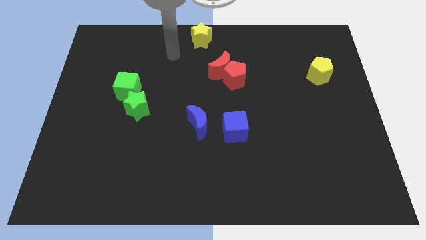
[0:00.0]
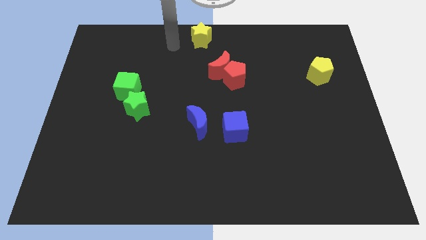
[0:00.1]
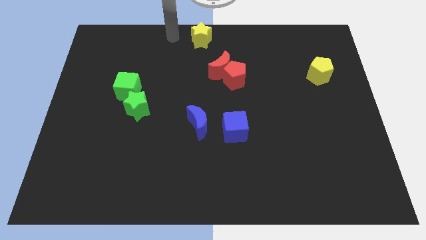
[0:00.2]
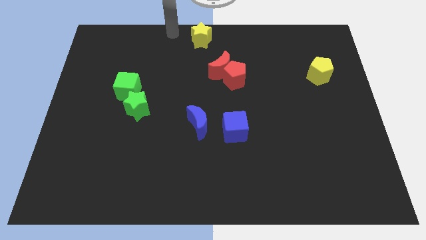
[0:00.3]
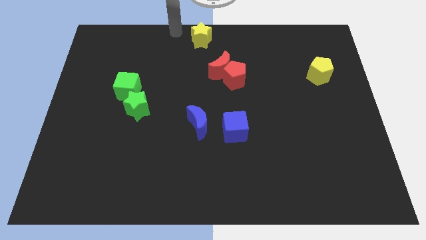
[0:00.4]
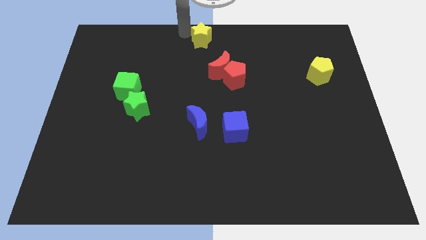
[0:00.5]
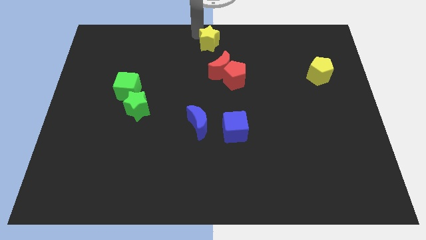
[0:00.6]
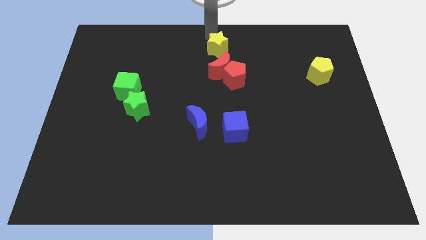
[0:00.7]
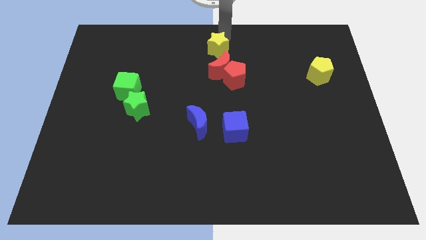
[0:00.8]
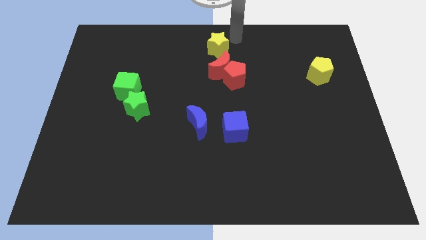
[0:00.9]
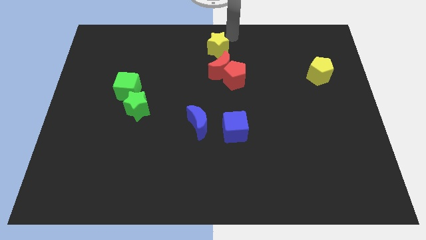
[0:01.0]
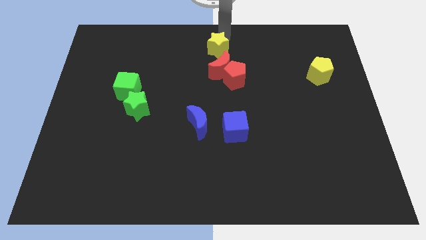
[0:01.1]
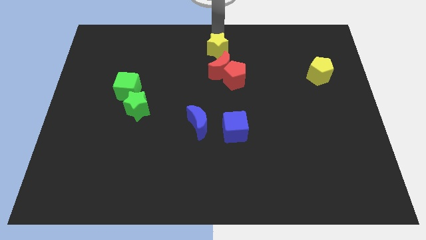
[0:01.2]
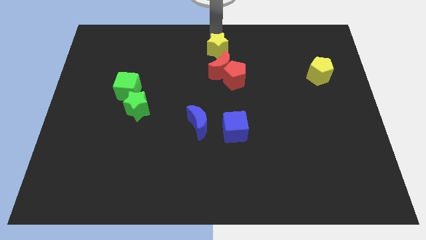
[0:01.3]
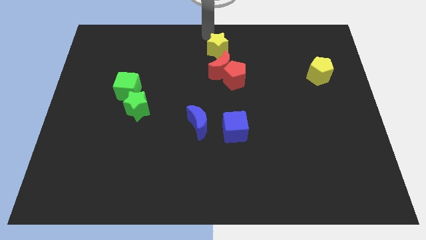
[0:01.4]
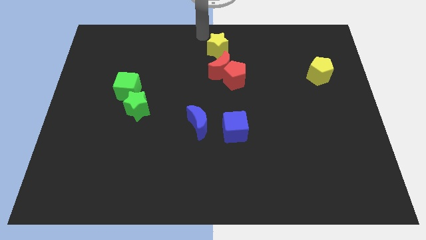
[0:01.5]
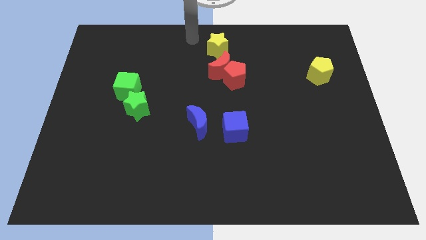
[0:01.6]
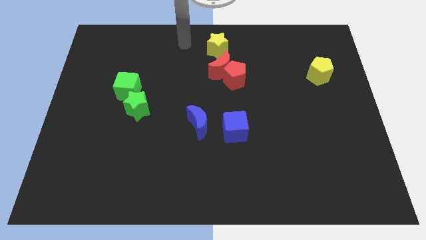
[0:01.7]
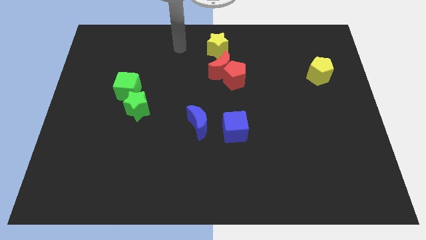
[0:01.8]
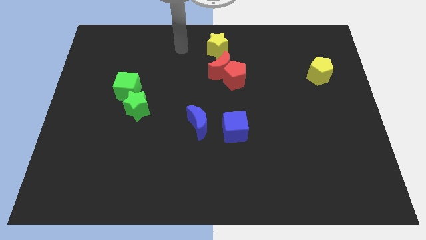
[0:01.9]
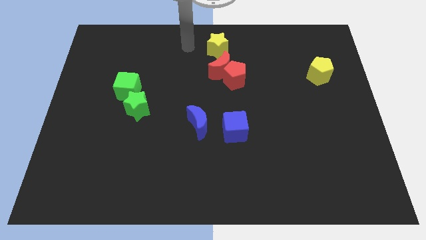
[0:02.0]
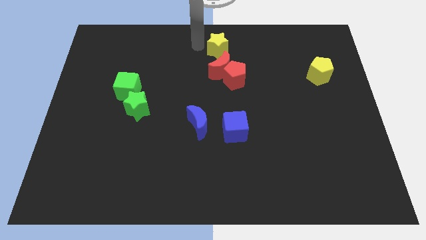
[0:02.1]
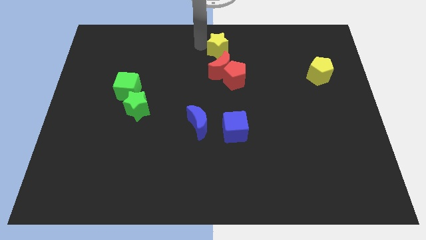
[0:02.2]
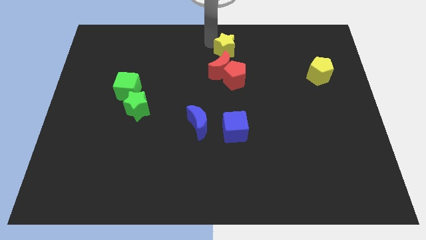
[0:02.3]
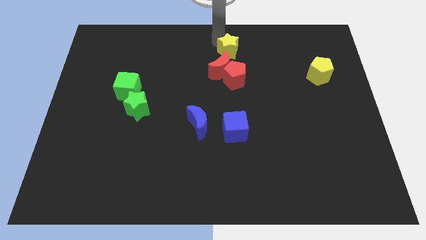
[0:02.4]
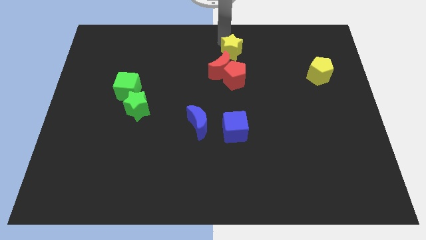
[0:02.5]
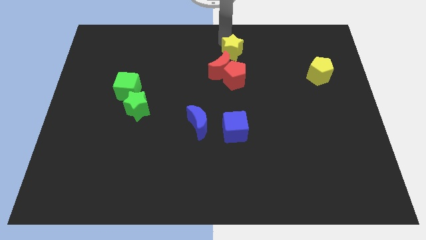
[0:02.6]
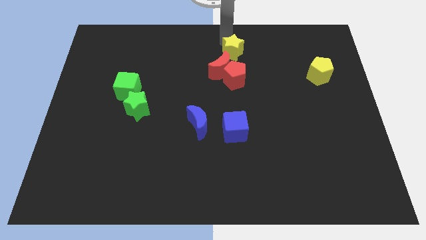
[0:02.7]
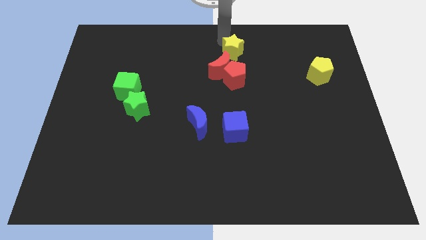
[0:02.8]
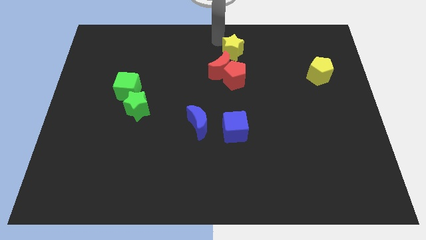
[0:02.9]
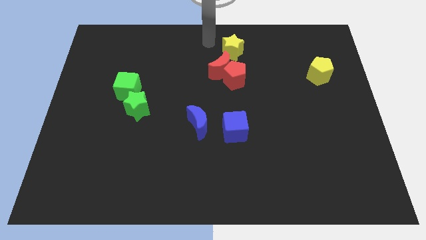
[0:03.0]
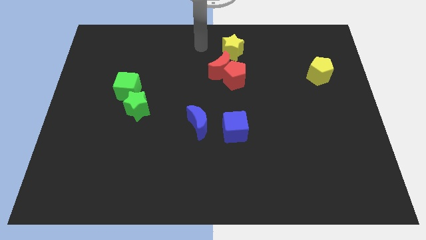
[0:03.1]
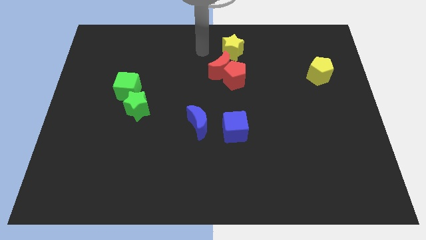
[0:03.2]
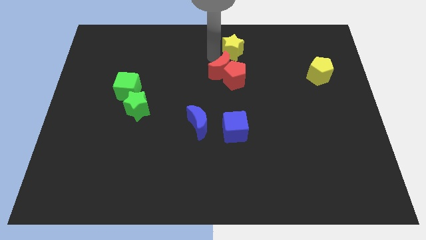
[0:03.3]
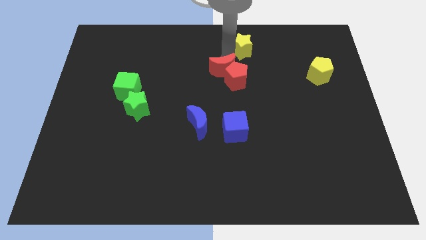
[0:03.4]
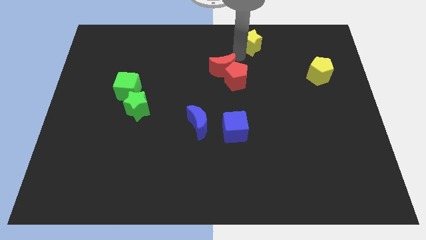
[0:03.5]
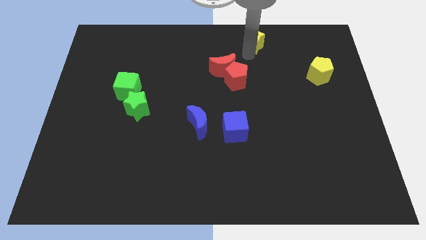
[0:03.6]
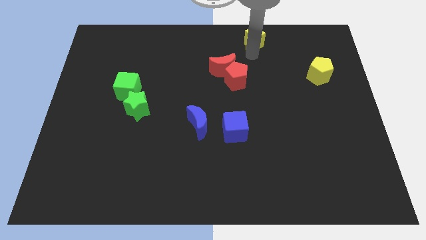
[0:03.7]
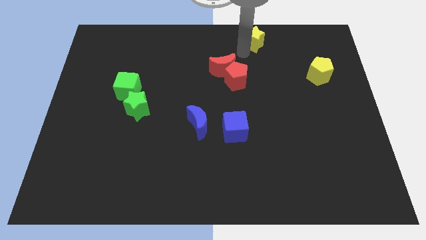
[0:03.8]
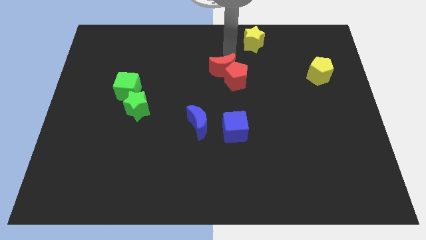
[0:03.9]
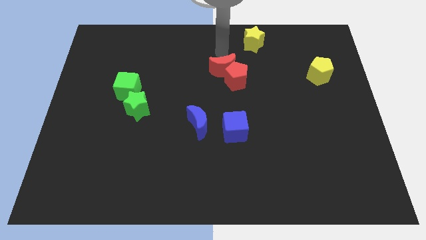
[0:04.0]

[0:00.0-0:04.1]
separate the yellow star from the red crescent

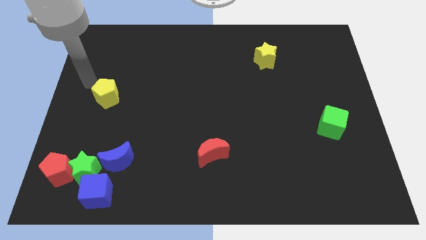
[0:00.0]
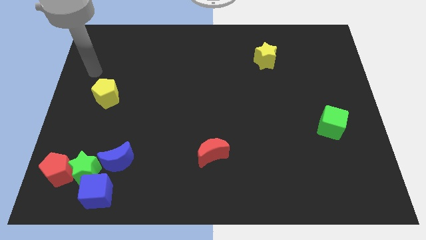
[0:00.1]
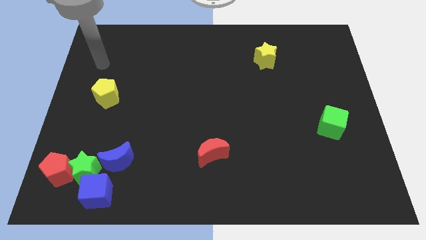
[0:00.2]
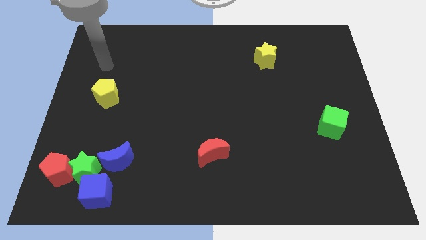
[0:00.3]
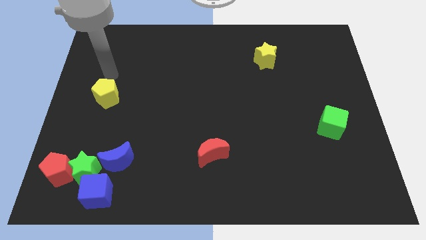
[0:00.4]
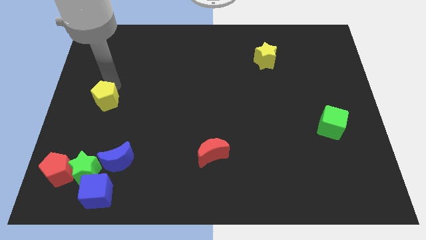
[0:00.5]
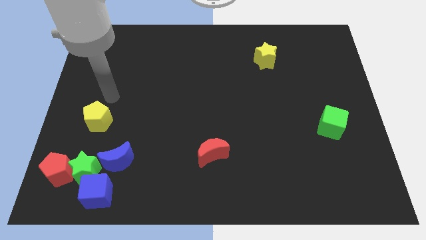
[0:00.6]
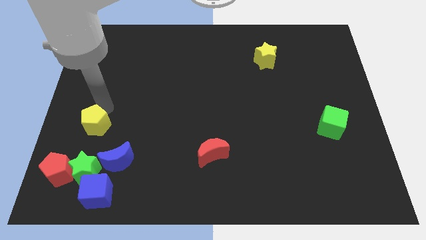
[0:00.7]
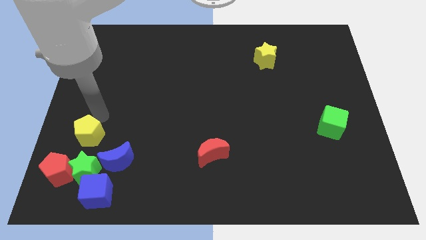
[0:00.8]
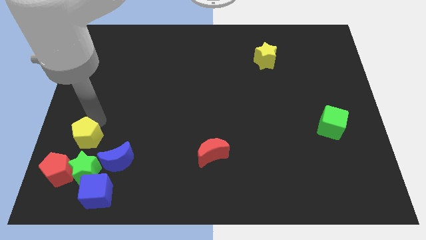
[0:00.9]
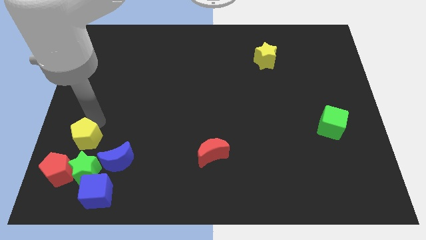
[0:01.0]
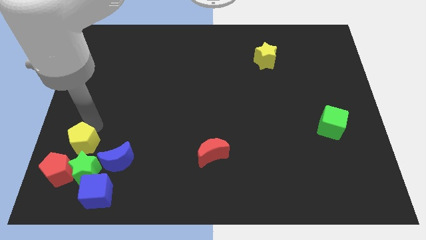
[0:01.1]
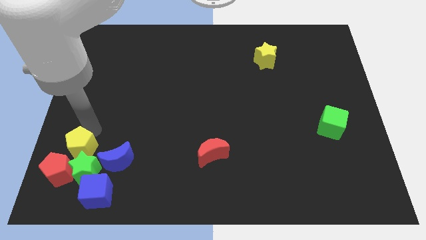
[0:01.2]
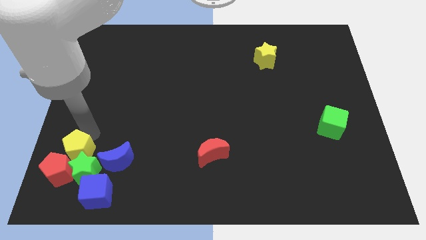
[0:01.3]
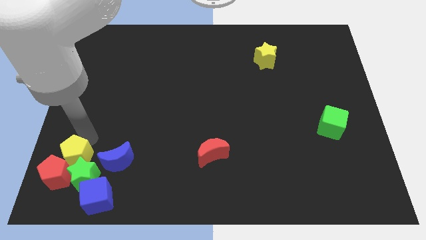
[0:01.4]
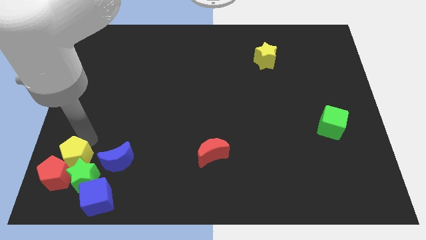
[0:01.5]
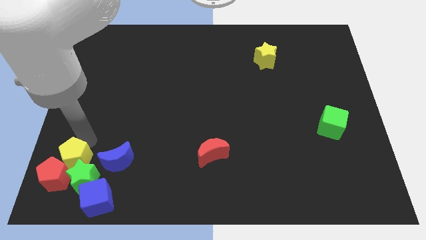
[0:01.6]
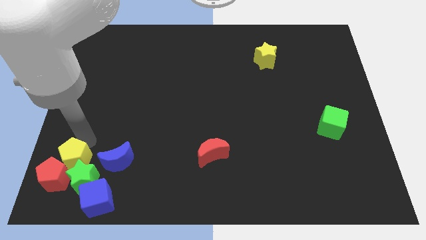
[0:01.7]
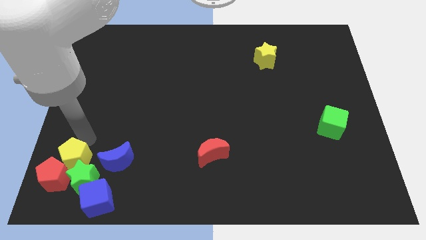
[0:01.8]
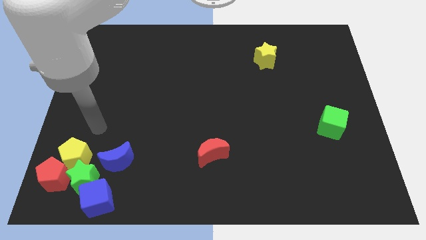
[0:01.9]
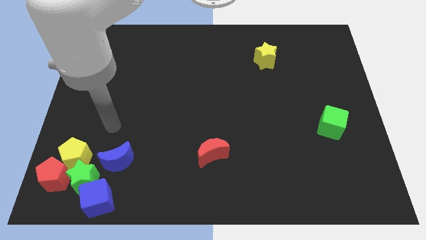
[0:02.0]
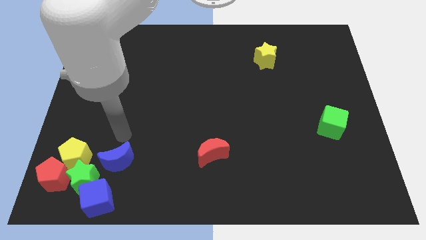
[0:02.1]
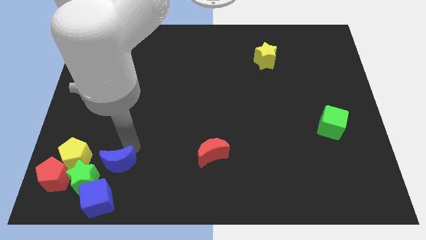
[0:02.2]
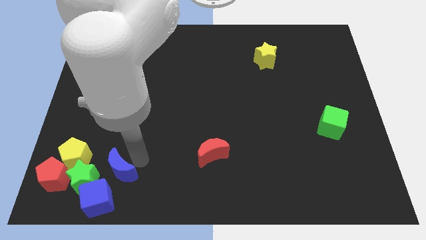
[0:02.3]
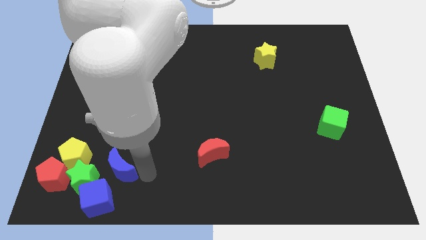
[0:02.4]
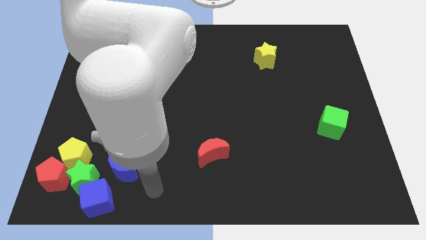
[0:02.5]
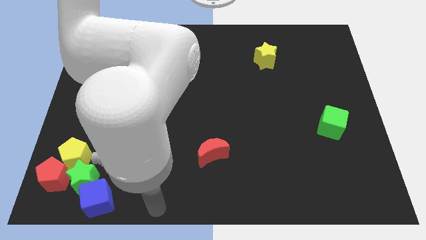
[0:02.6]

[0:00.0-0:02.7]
slightly touch the blue moon

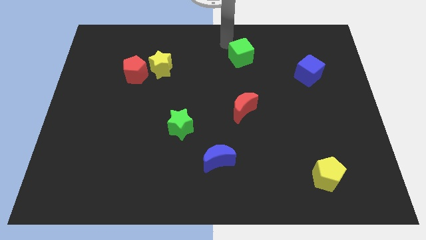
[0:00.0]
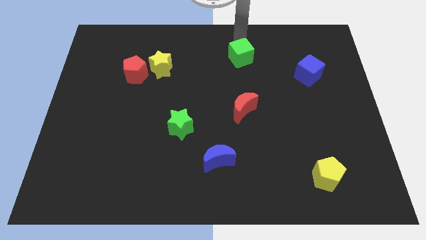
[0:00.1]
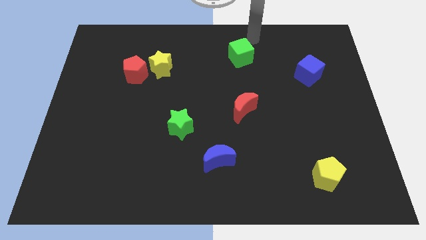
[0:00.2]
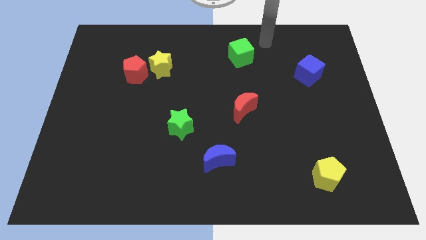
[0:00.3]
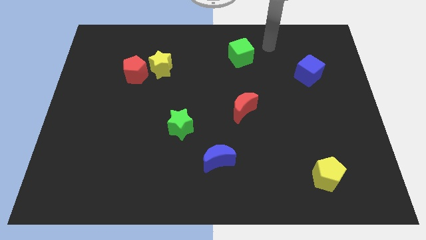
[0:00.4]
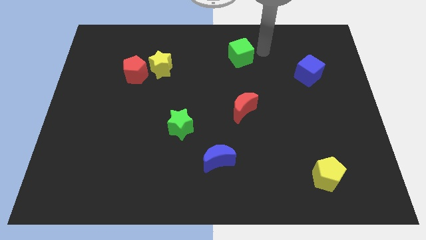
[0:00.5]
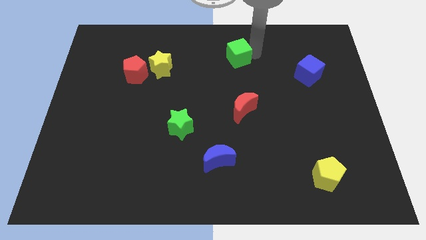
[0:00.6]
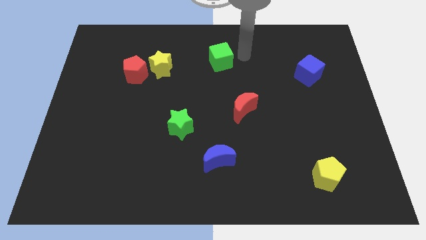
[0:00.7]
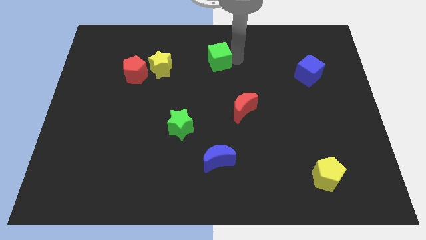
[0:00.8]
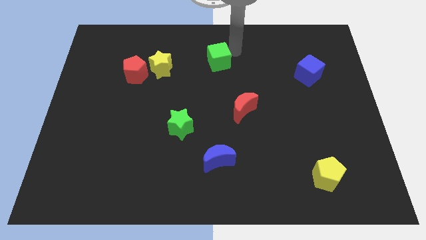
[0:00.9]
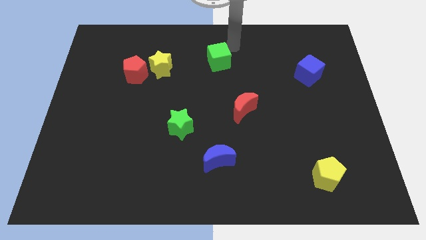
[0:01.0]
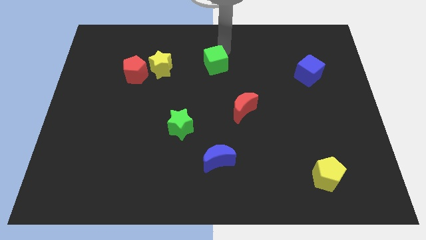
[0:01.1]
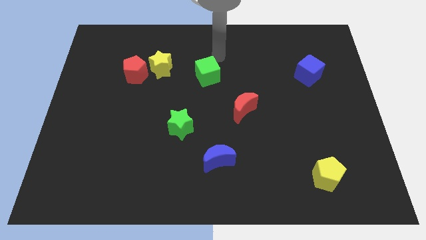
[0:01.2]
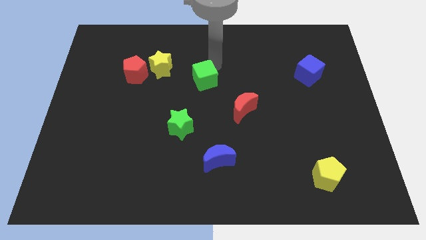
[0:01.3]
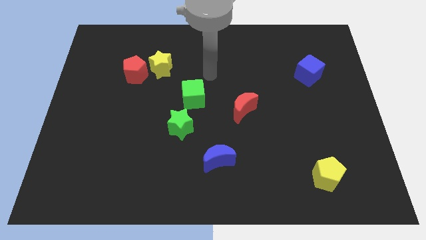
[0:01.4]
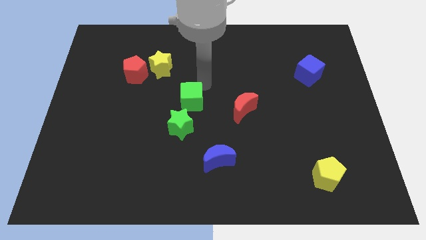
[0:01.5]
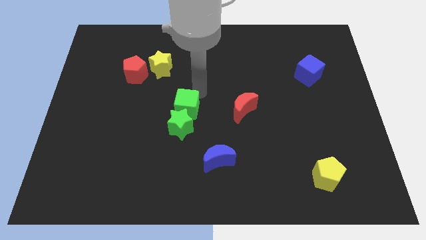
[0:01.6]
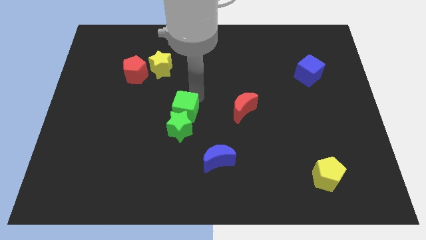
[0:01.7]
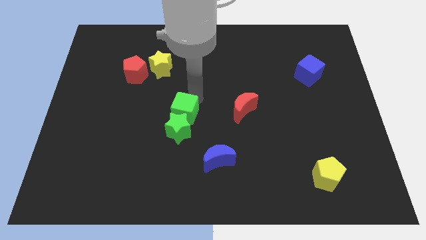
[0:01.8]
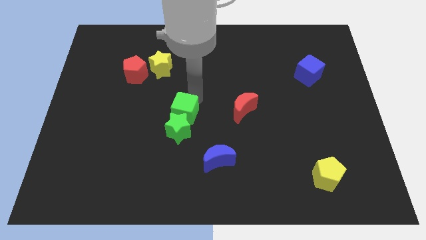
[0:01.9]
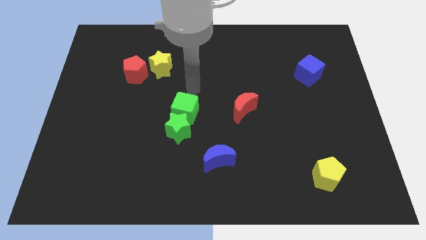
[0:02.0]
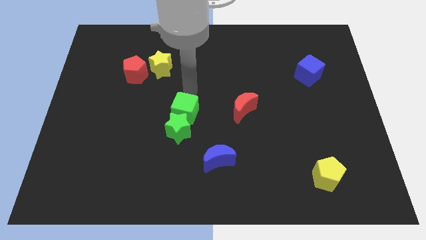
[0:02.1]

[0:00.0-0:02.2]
move the green cube above the green star
